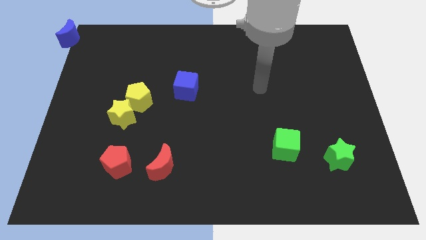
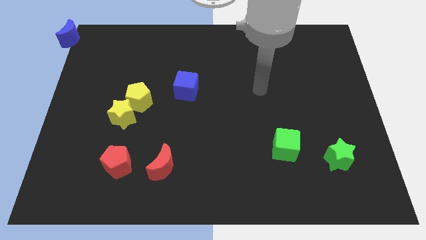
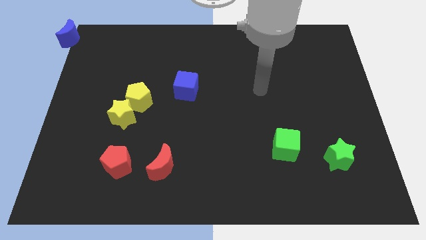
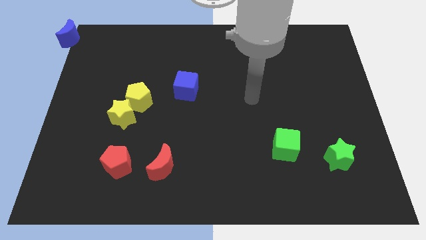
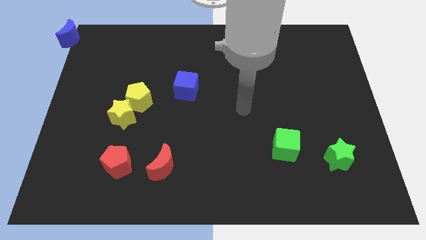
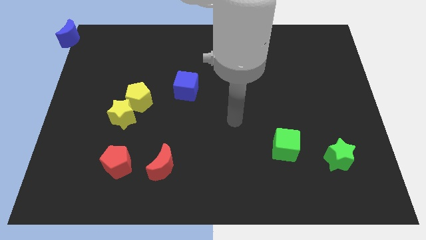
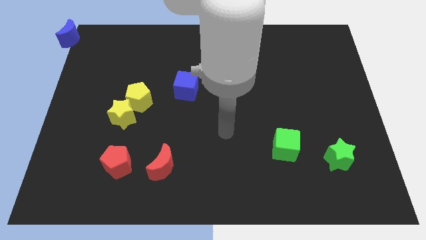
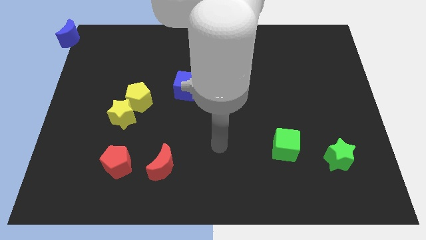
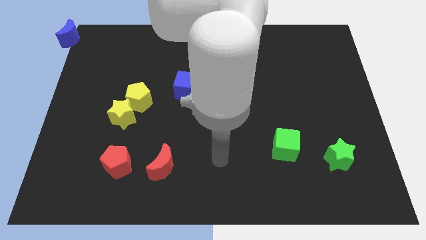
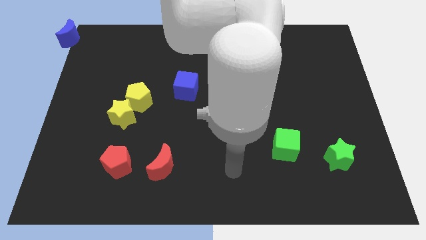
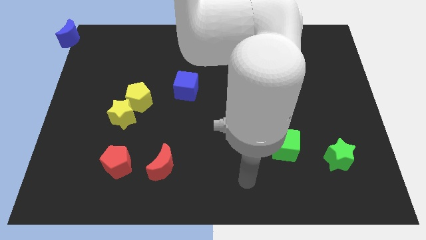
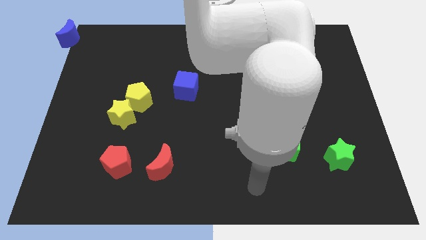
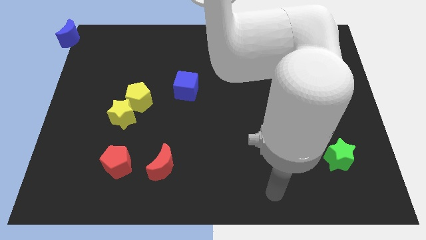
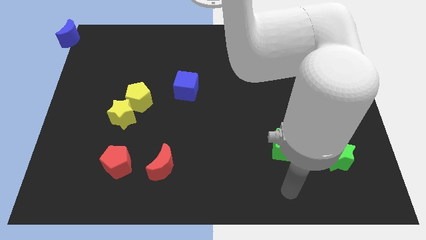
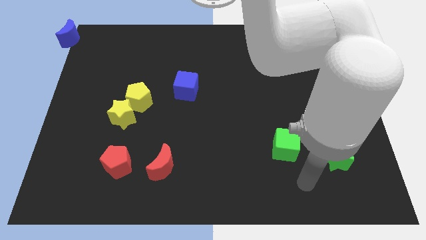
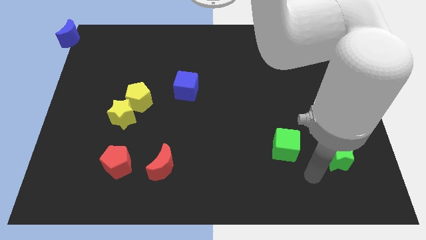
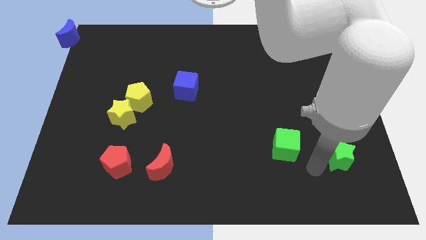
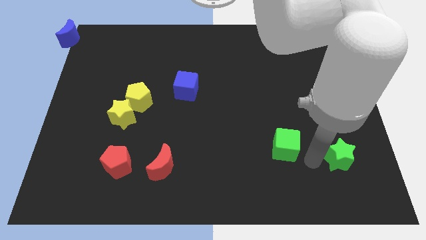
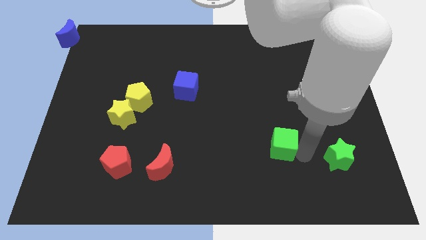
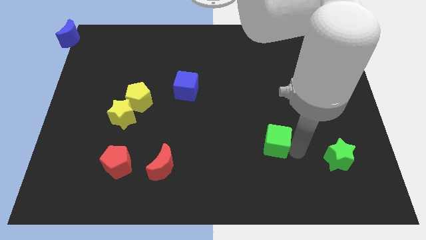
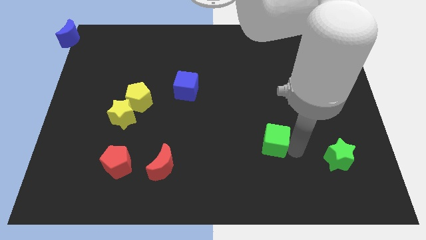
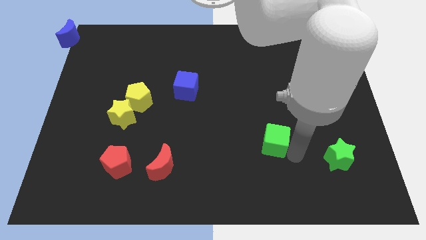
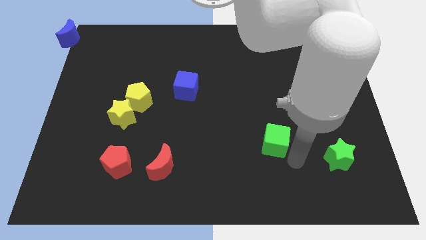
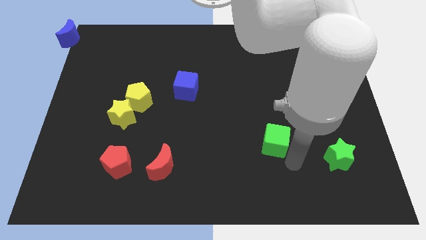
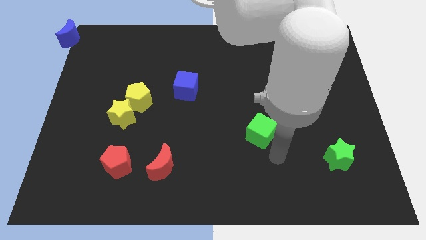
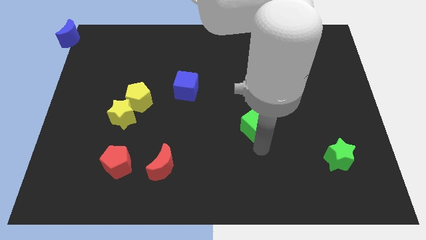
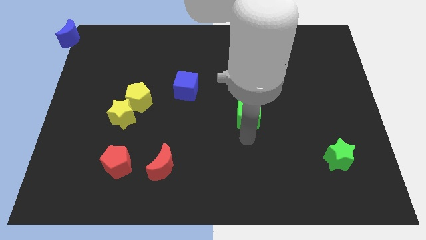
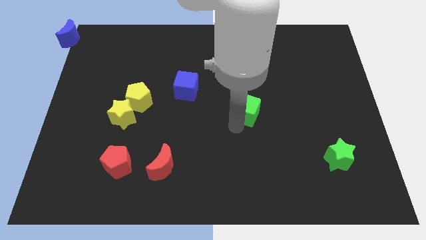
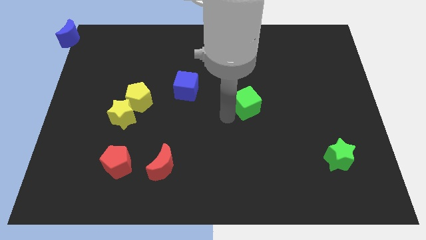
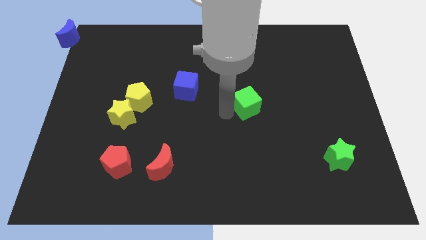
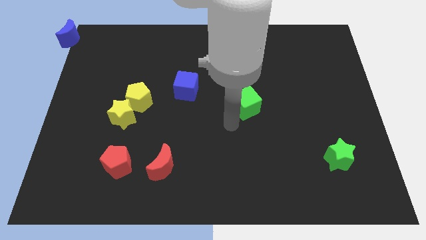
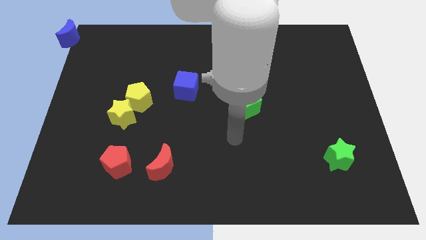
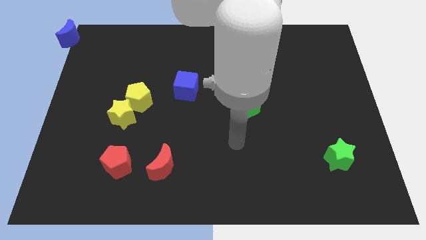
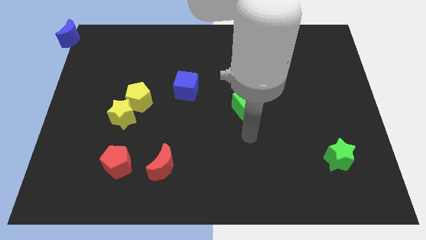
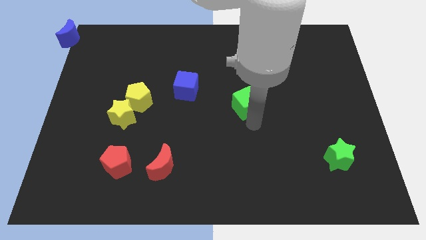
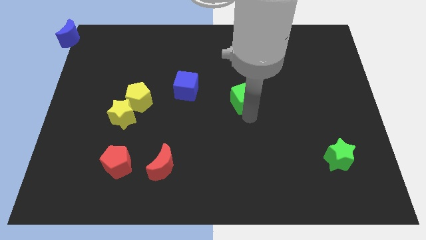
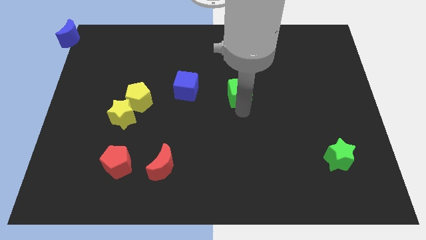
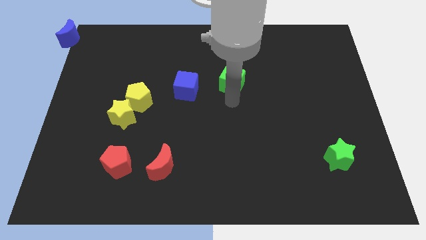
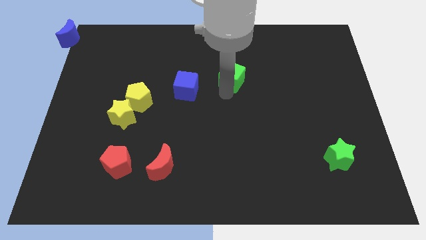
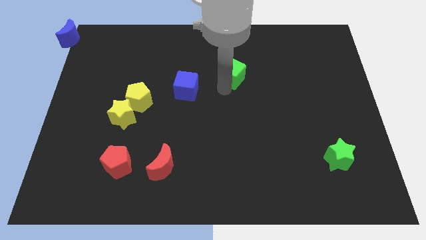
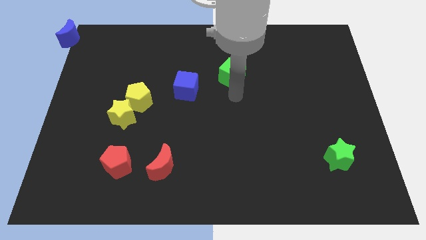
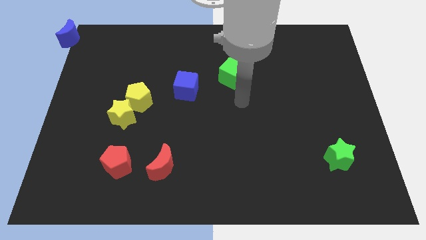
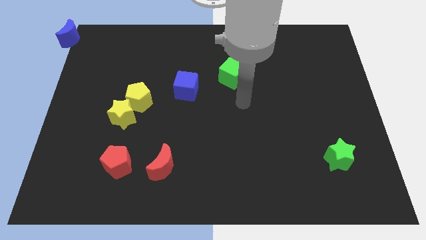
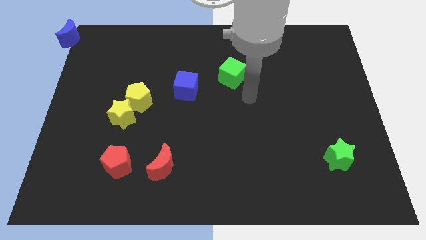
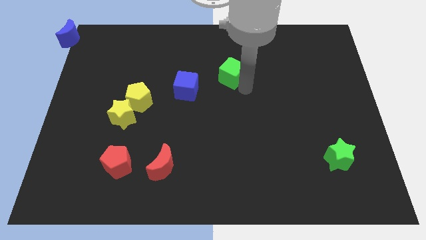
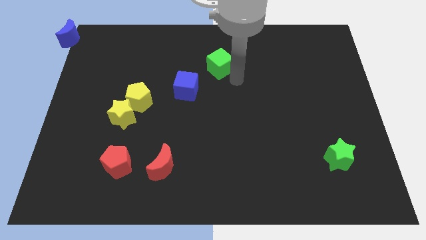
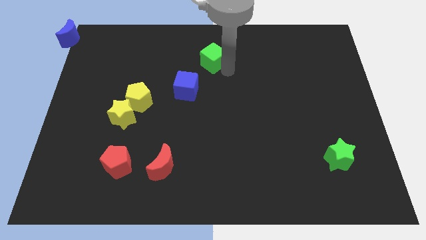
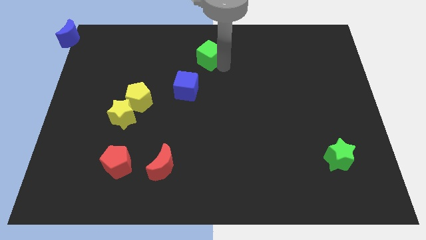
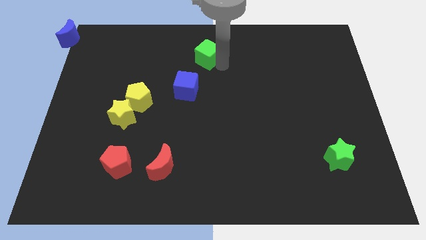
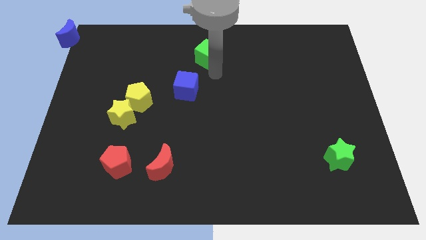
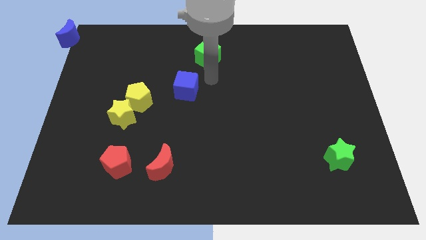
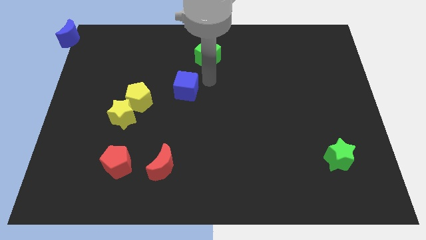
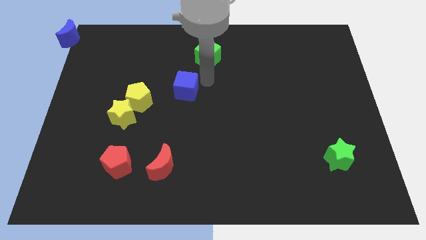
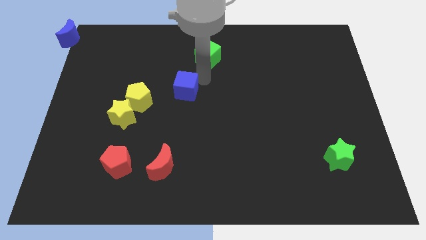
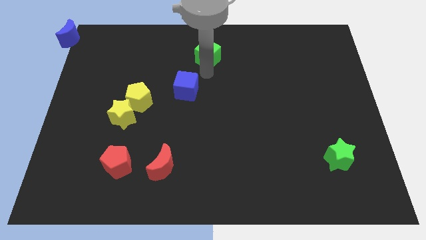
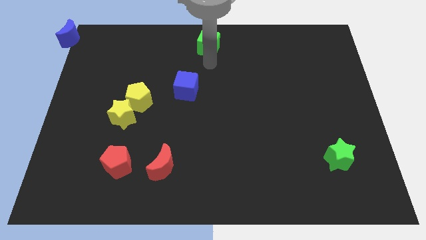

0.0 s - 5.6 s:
place green cube to the top right corner of the blue cube

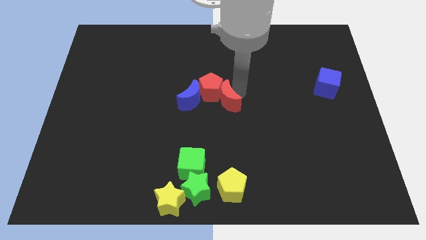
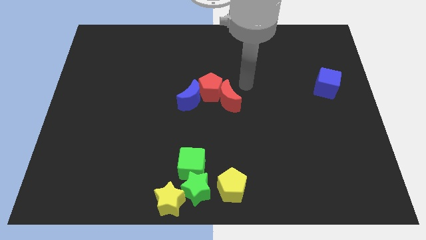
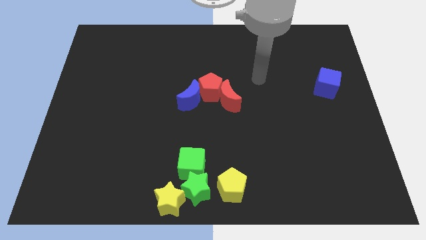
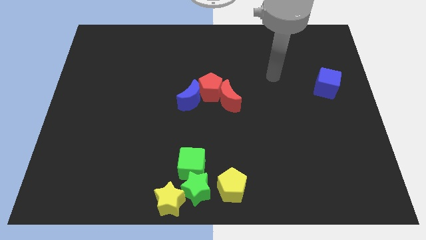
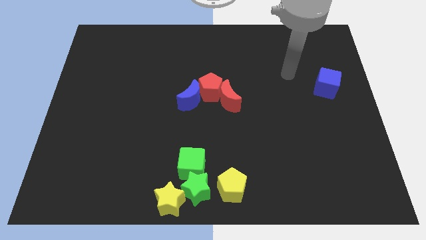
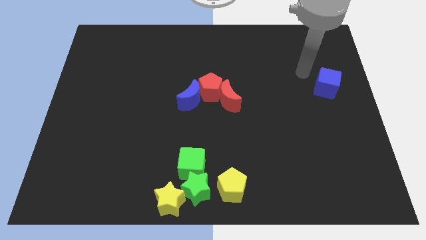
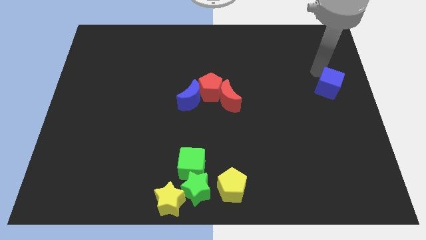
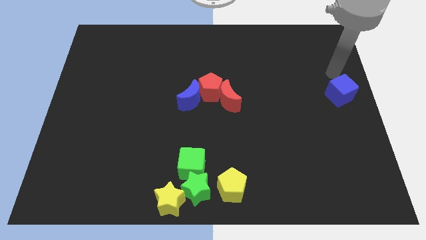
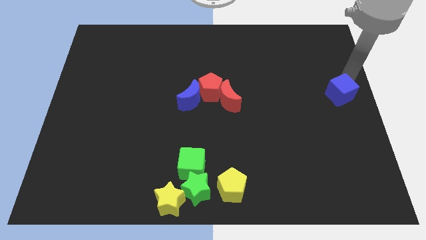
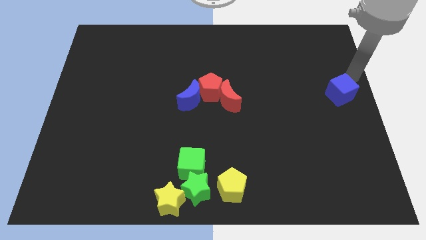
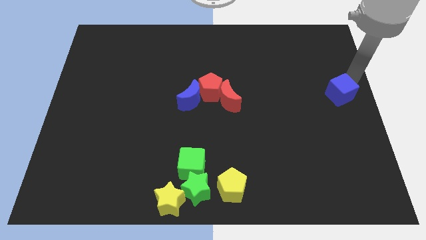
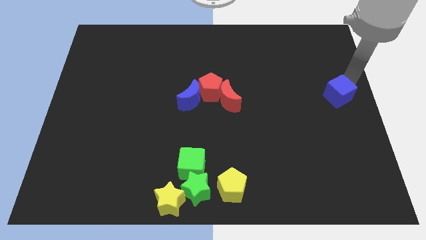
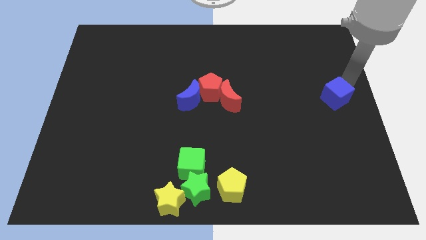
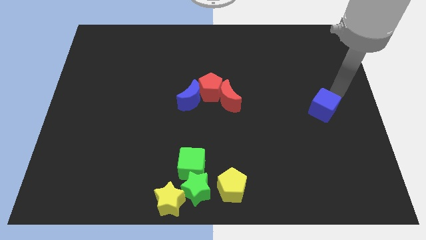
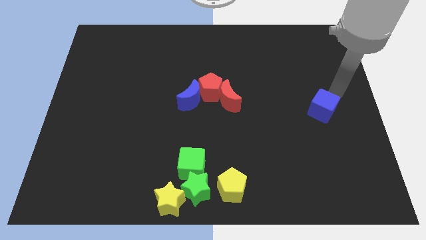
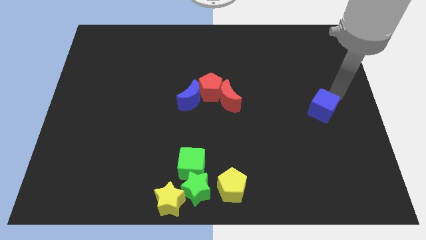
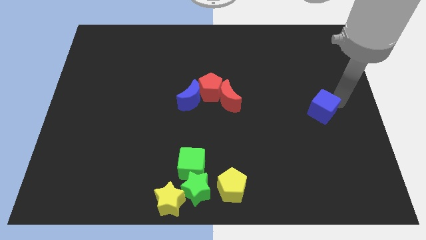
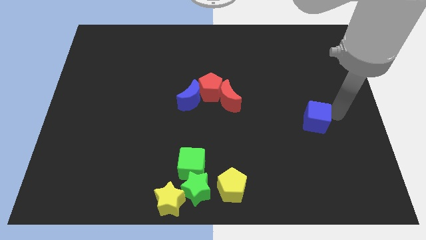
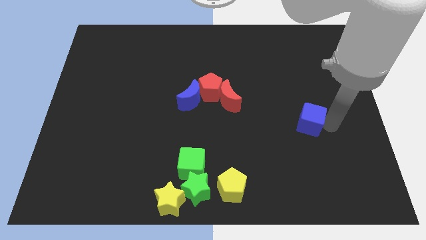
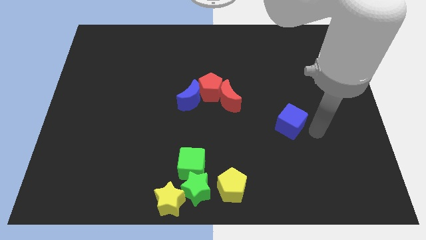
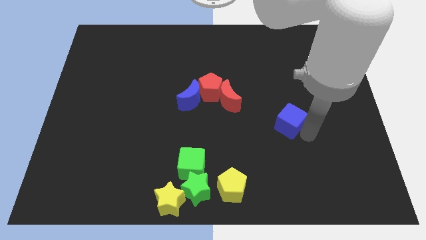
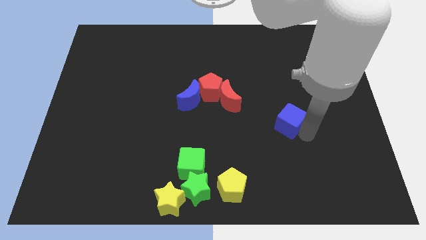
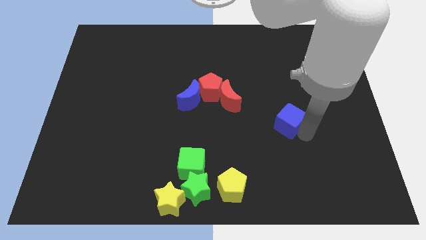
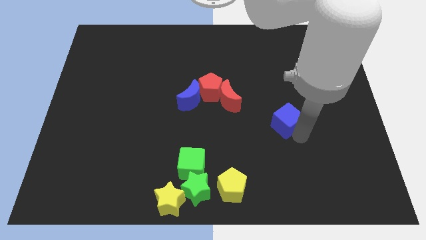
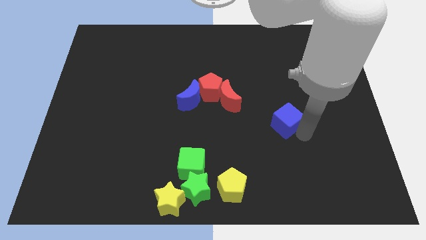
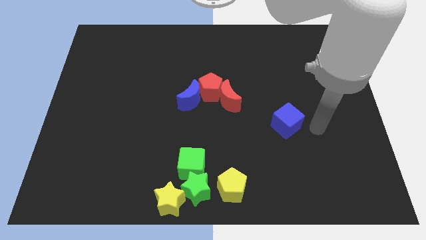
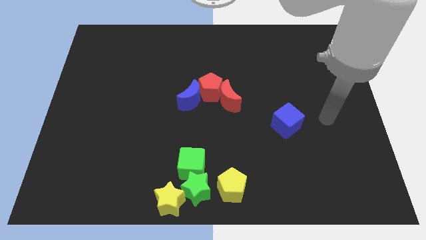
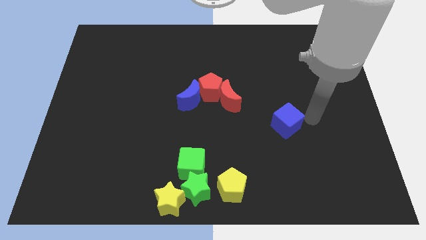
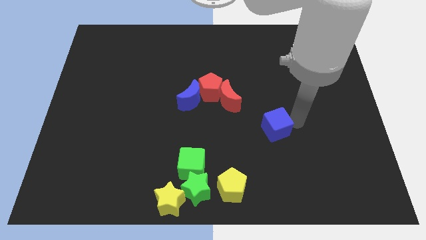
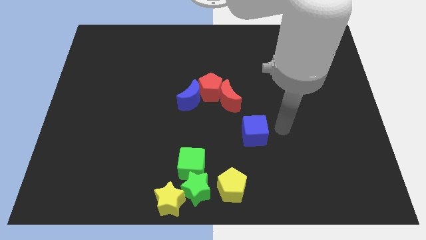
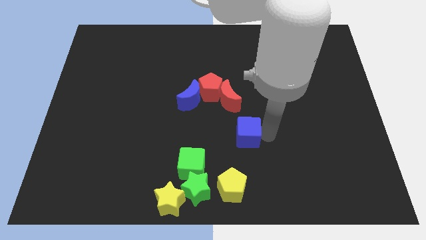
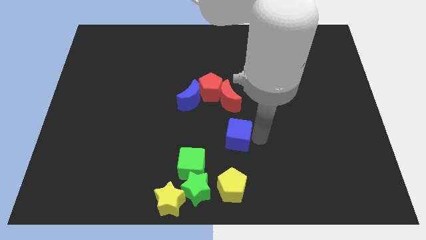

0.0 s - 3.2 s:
push the blue cube diagonal to the green star
